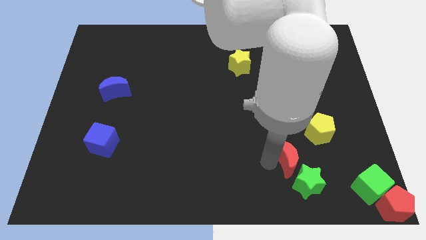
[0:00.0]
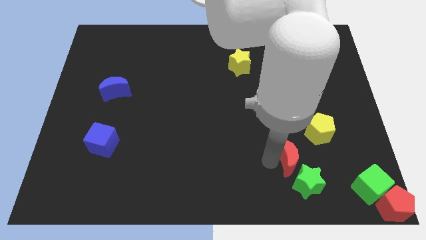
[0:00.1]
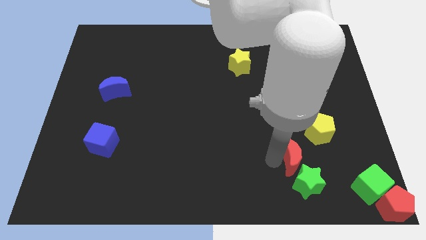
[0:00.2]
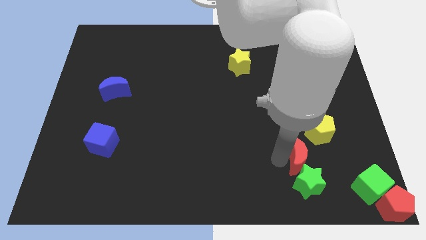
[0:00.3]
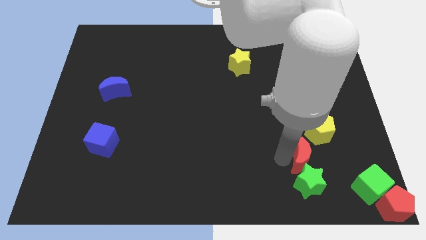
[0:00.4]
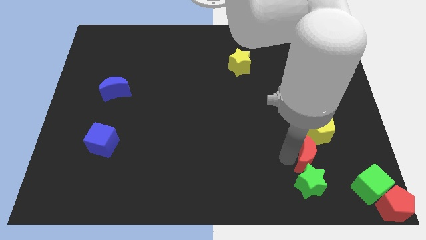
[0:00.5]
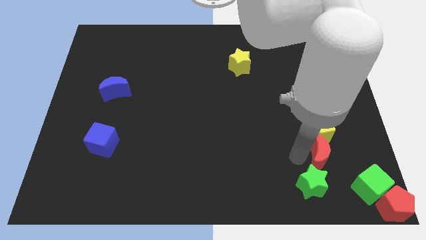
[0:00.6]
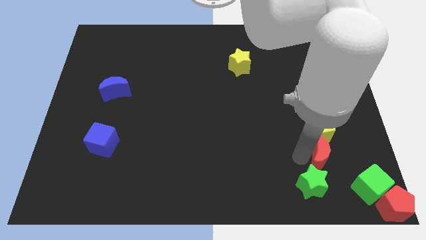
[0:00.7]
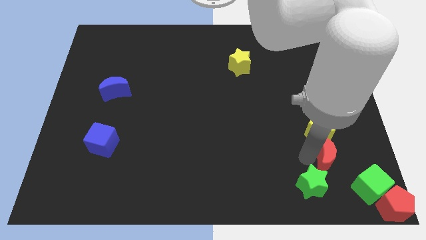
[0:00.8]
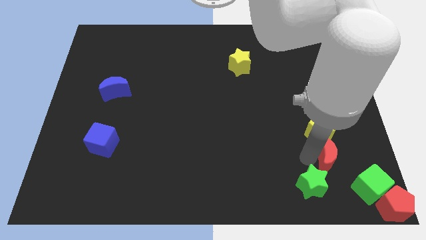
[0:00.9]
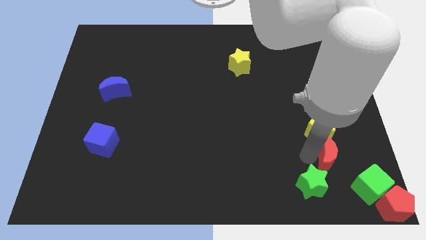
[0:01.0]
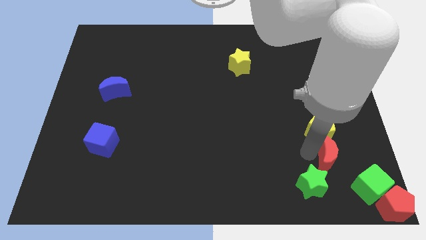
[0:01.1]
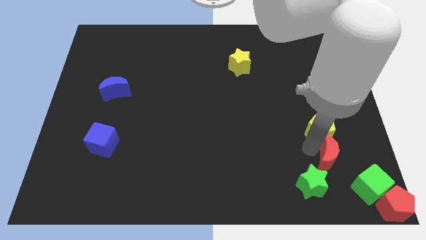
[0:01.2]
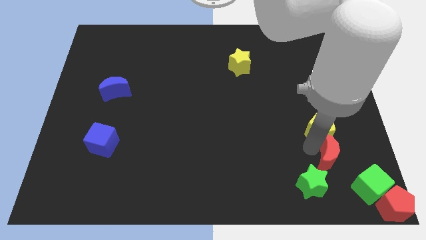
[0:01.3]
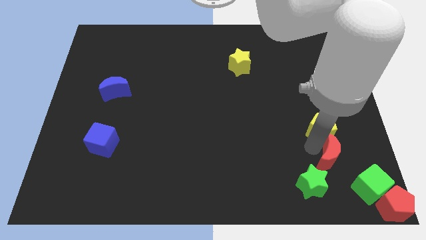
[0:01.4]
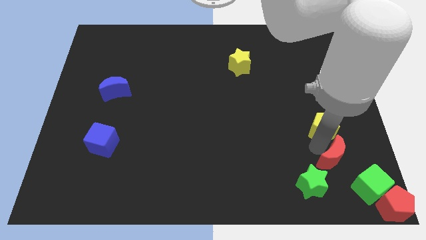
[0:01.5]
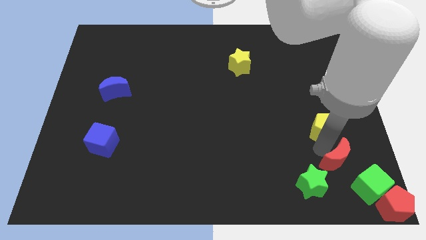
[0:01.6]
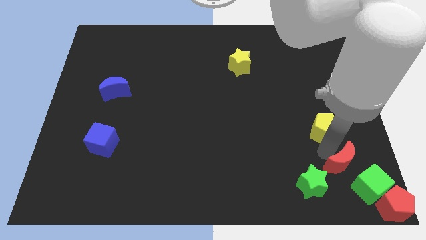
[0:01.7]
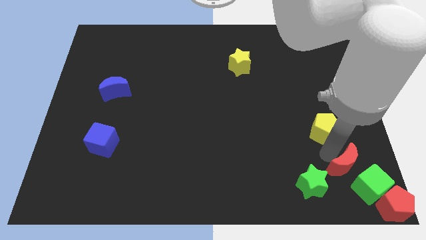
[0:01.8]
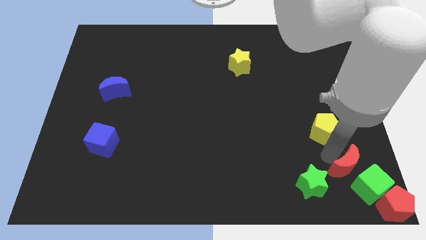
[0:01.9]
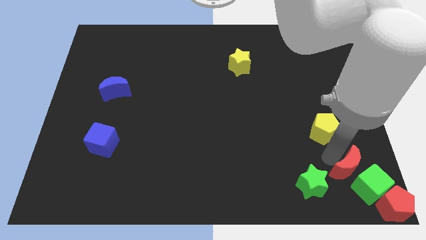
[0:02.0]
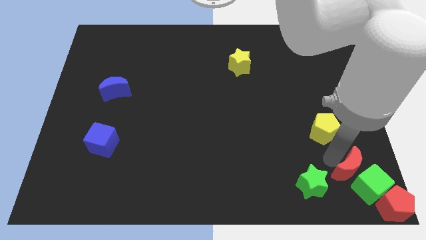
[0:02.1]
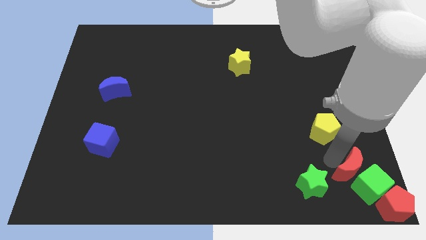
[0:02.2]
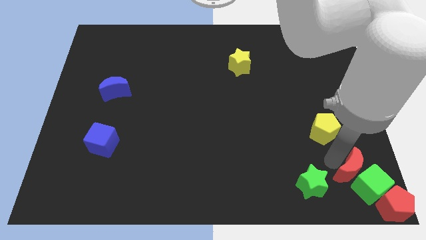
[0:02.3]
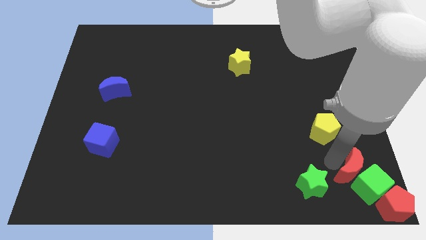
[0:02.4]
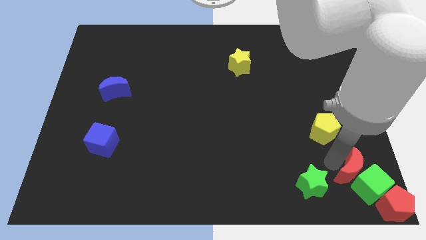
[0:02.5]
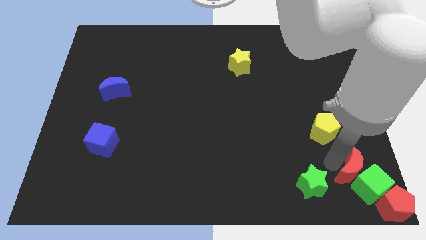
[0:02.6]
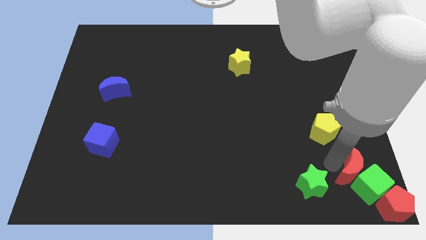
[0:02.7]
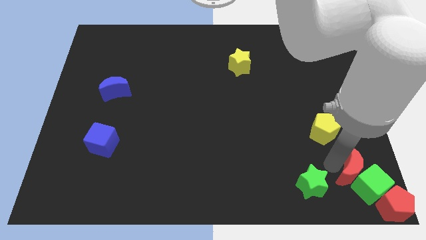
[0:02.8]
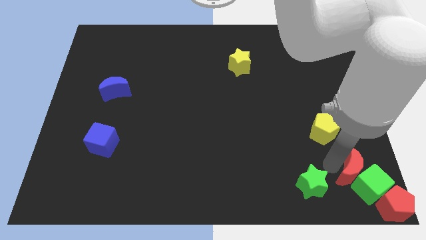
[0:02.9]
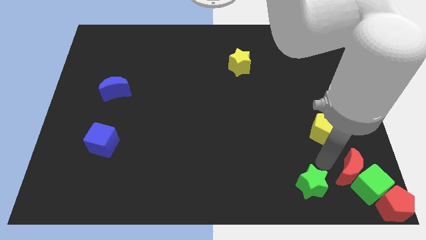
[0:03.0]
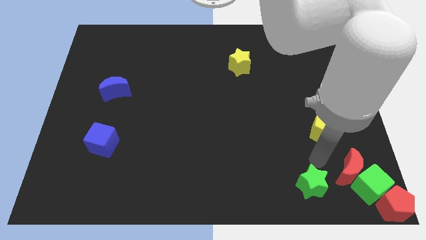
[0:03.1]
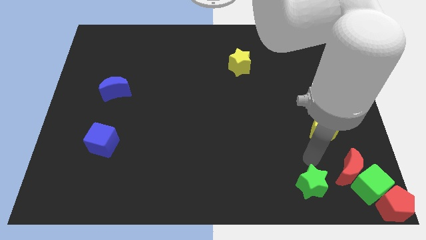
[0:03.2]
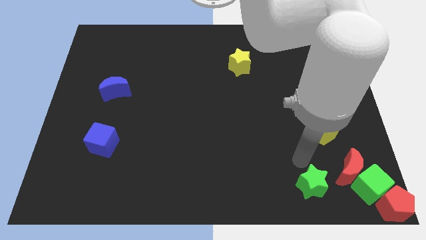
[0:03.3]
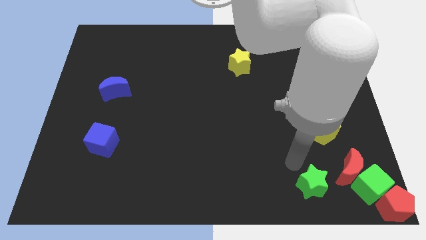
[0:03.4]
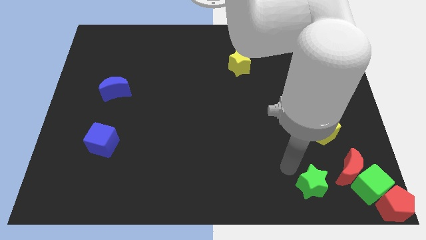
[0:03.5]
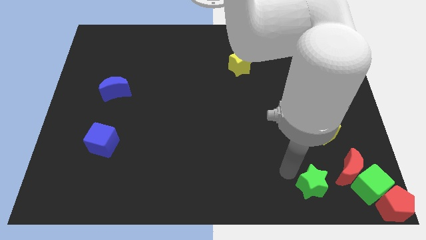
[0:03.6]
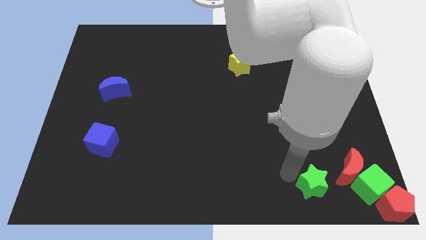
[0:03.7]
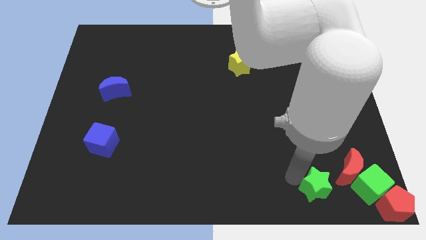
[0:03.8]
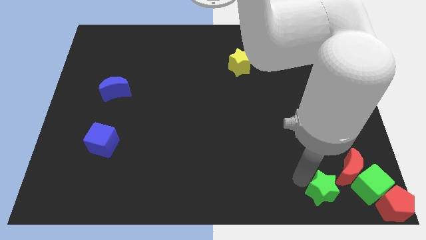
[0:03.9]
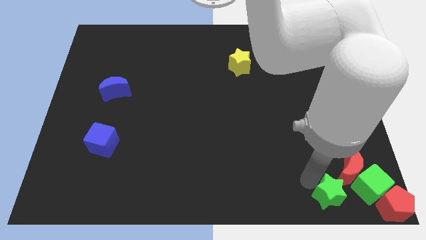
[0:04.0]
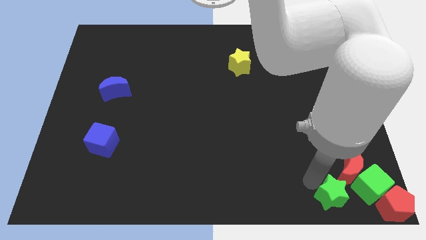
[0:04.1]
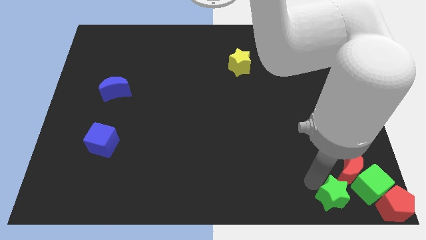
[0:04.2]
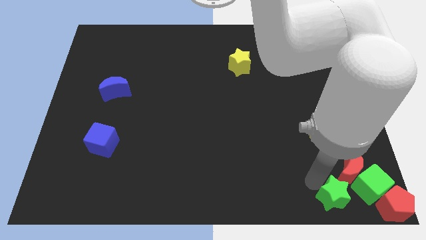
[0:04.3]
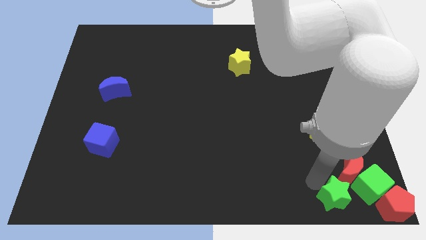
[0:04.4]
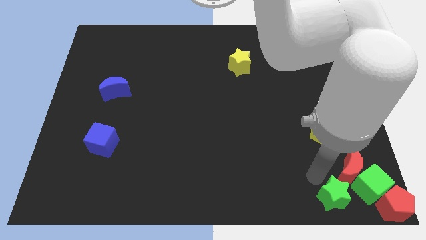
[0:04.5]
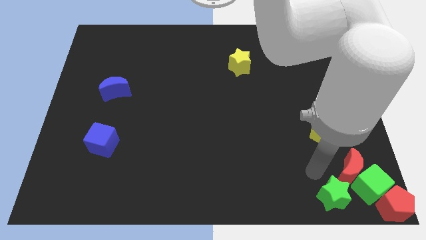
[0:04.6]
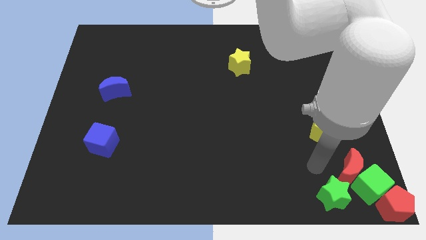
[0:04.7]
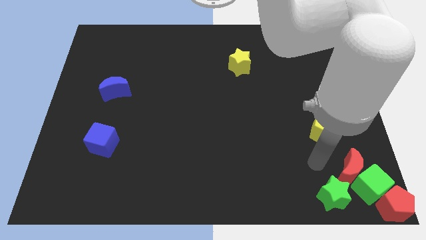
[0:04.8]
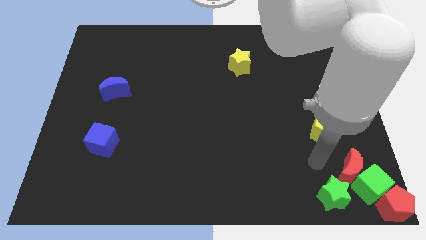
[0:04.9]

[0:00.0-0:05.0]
move the red moon on top left of the green cube

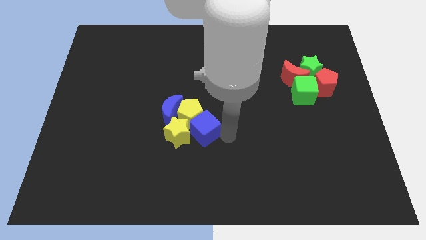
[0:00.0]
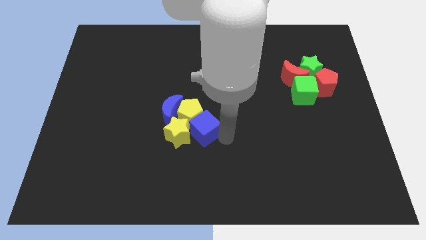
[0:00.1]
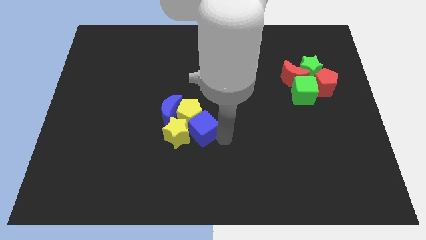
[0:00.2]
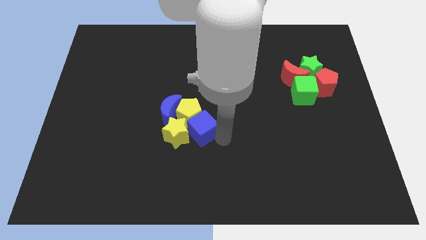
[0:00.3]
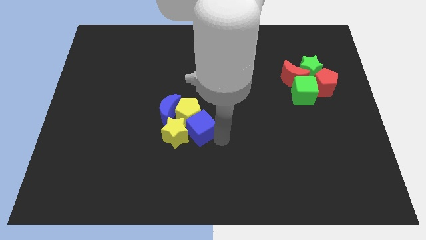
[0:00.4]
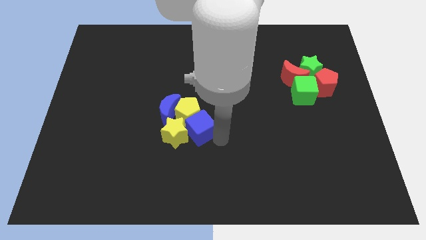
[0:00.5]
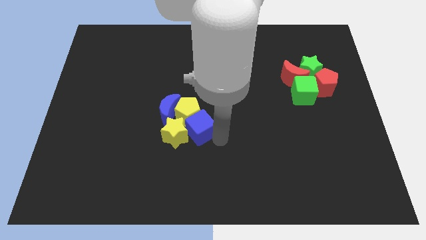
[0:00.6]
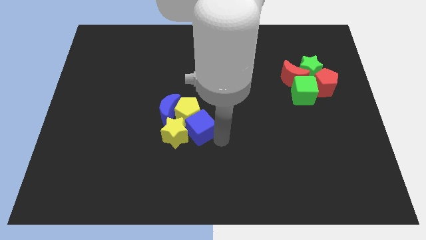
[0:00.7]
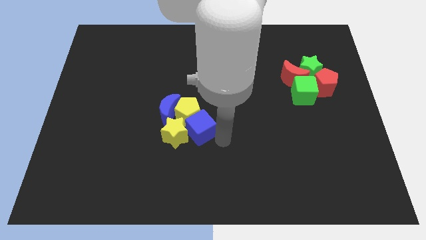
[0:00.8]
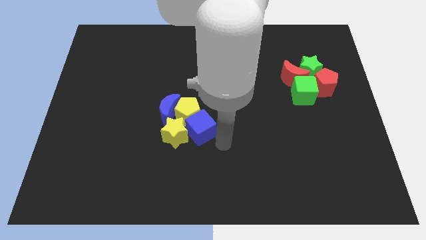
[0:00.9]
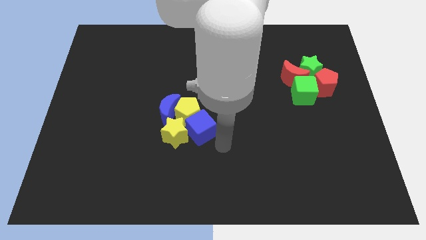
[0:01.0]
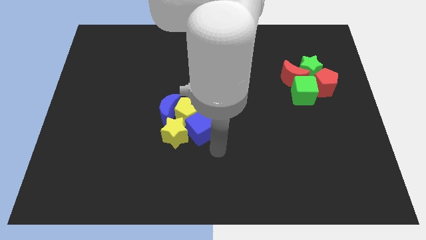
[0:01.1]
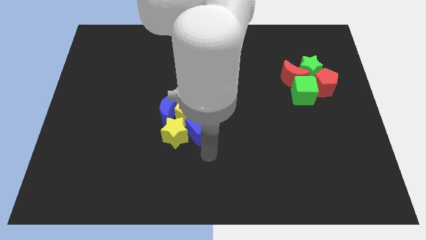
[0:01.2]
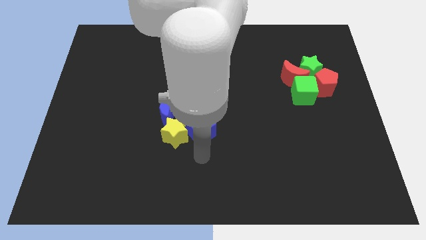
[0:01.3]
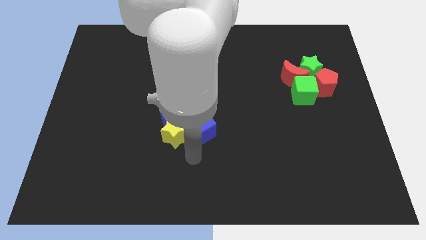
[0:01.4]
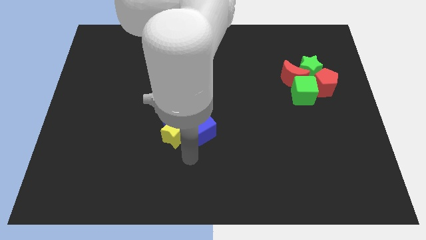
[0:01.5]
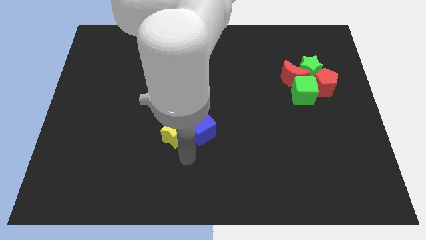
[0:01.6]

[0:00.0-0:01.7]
push blue cube into yellow blocks

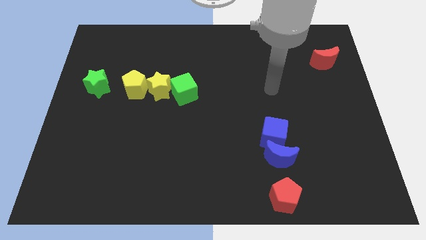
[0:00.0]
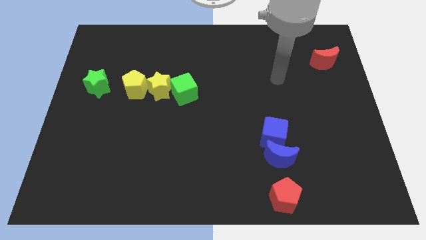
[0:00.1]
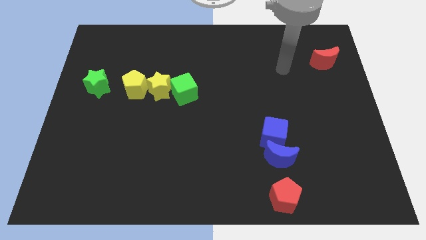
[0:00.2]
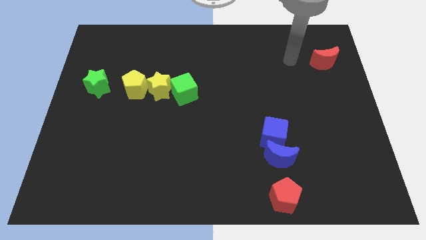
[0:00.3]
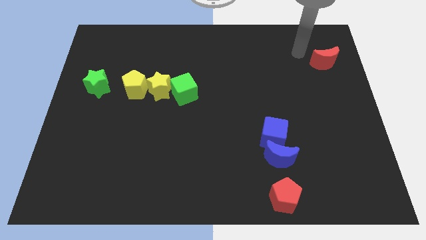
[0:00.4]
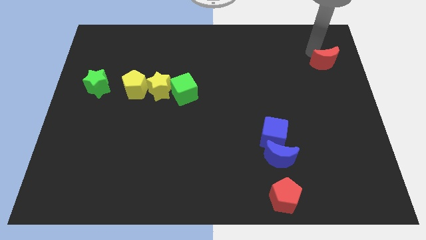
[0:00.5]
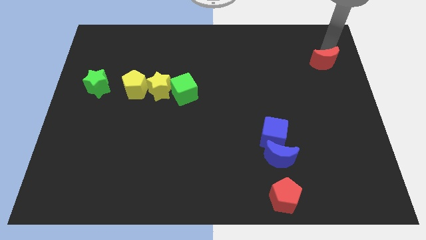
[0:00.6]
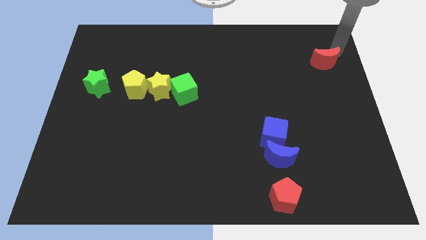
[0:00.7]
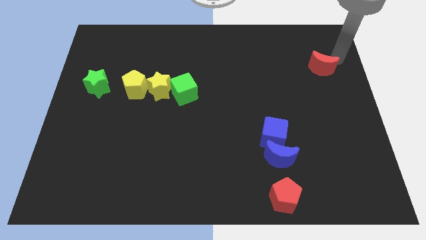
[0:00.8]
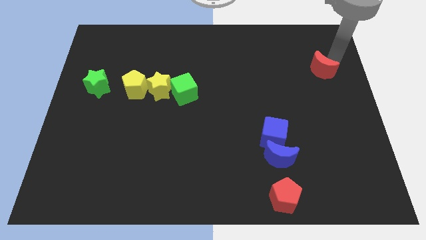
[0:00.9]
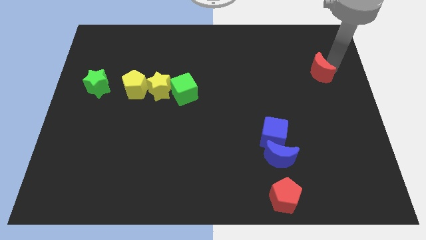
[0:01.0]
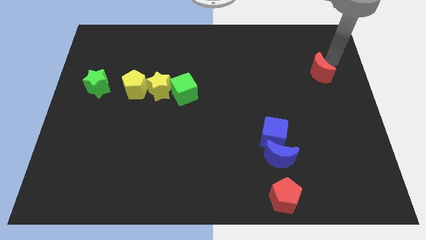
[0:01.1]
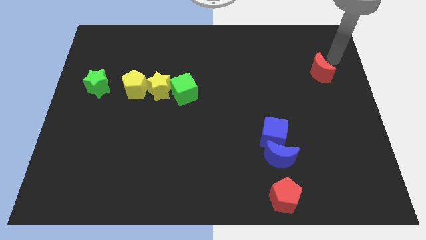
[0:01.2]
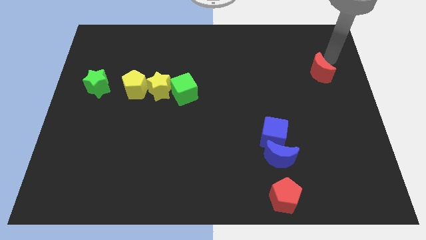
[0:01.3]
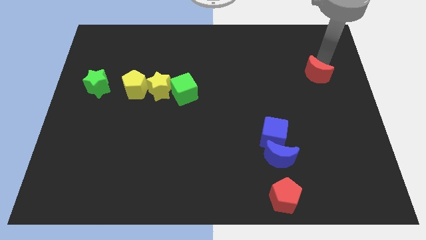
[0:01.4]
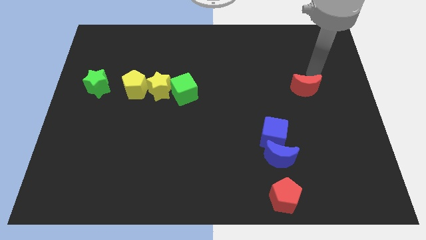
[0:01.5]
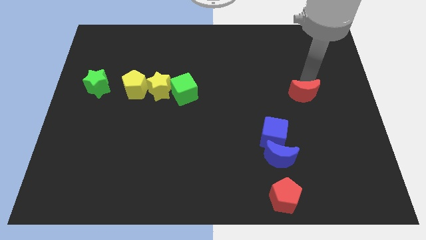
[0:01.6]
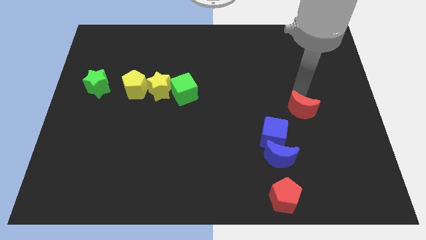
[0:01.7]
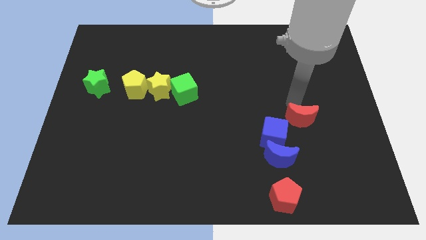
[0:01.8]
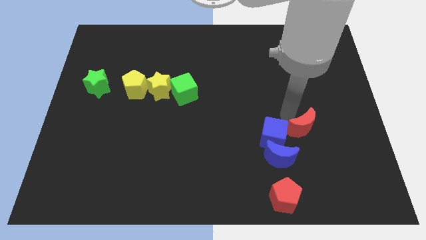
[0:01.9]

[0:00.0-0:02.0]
push red moon close to the blue cube

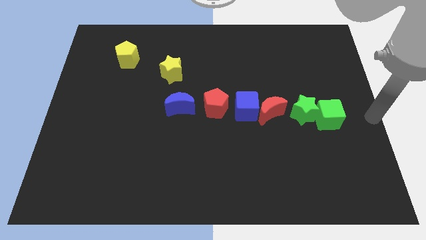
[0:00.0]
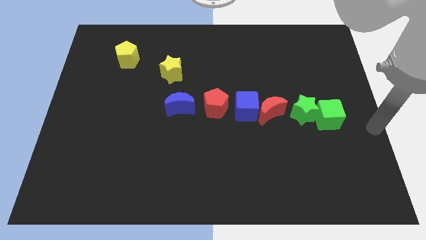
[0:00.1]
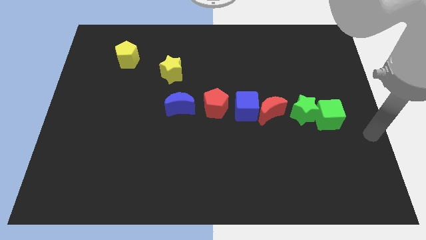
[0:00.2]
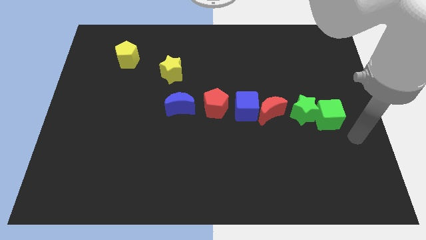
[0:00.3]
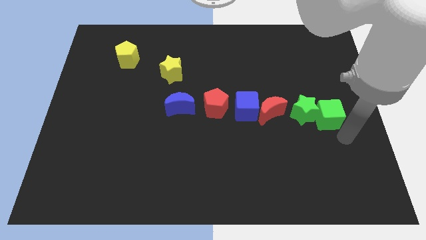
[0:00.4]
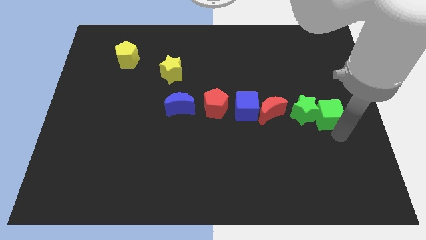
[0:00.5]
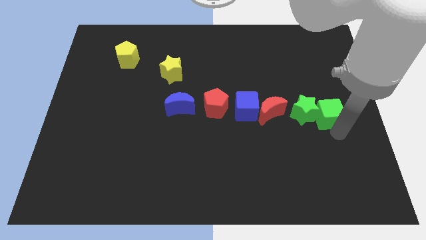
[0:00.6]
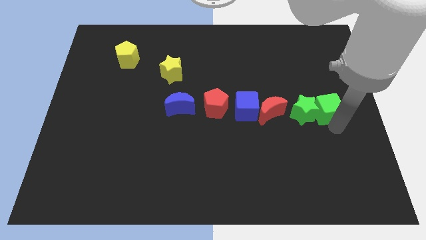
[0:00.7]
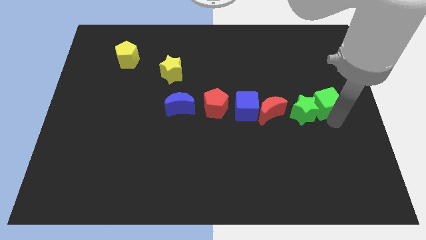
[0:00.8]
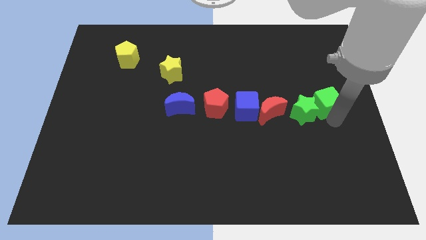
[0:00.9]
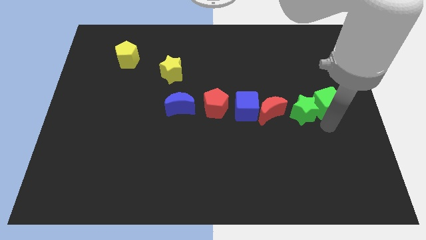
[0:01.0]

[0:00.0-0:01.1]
slightly move the green cube towards up
